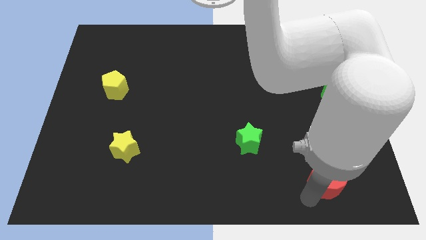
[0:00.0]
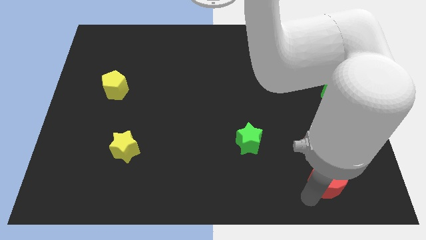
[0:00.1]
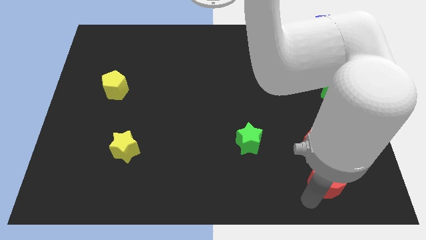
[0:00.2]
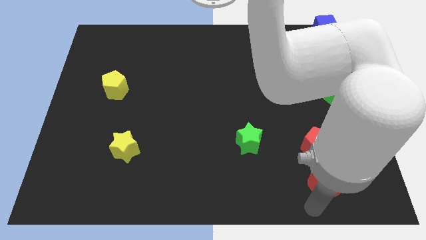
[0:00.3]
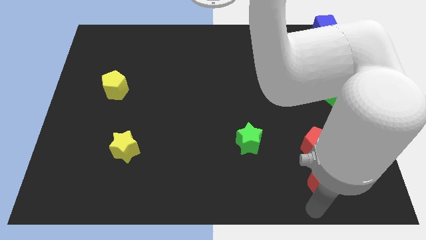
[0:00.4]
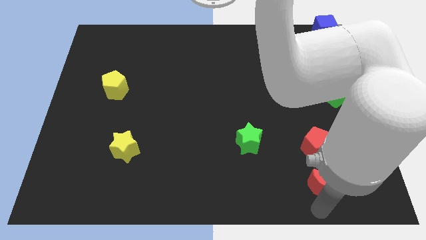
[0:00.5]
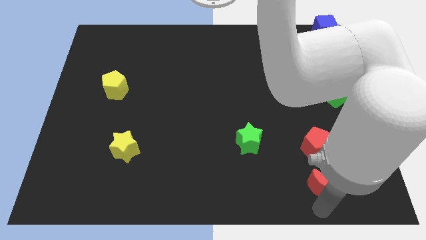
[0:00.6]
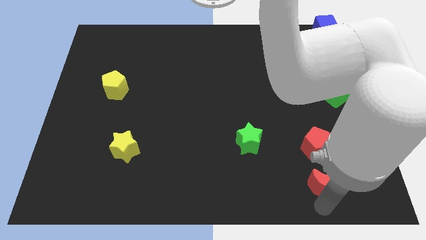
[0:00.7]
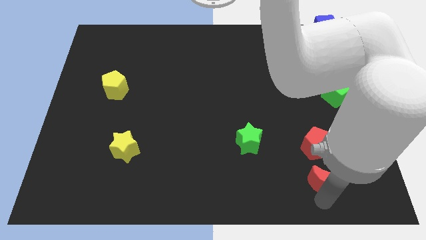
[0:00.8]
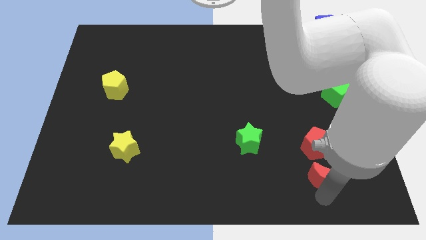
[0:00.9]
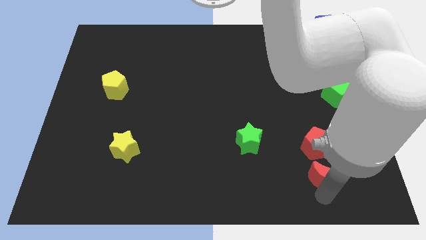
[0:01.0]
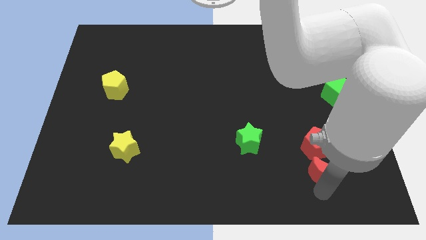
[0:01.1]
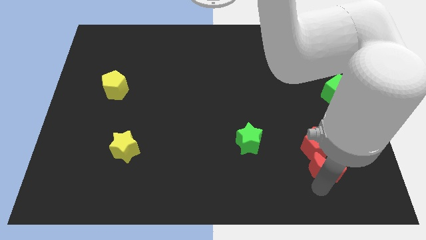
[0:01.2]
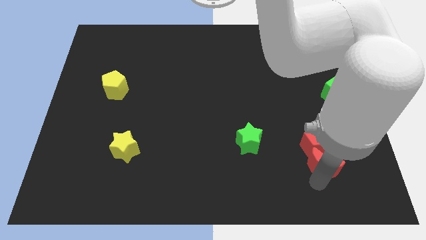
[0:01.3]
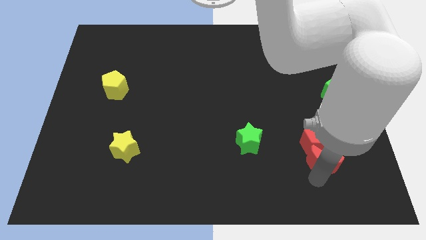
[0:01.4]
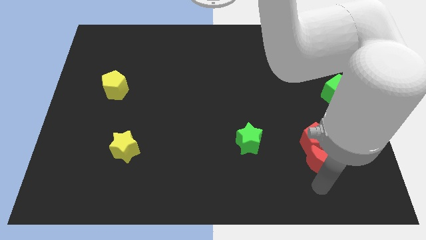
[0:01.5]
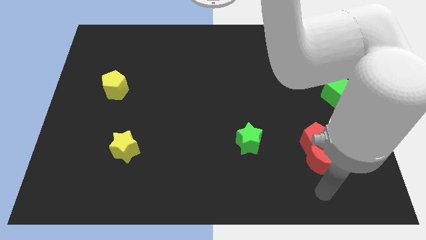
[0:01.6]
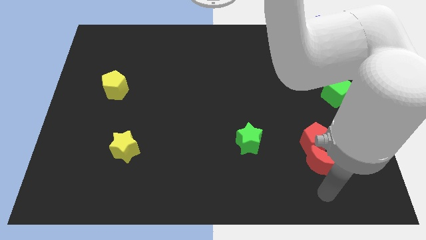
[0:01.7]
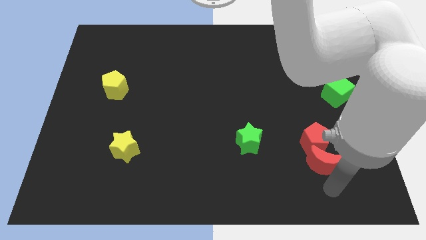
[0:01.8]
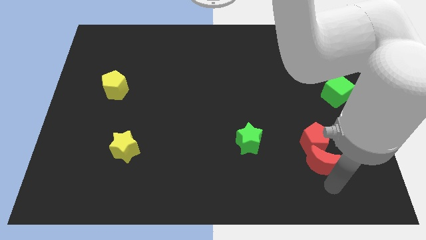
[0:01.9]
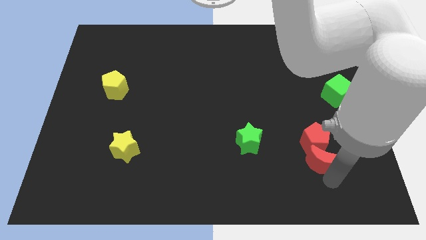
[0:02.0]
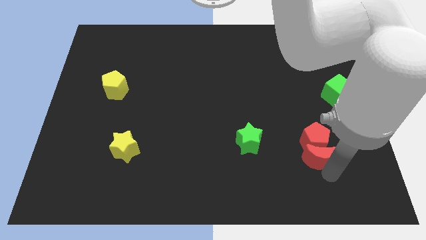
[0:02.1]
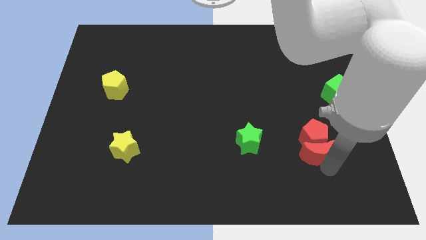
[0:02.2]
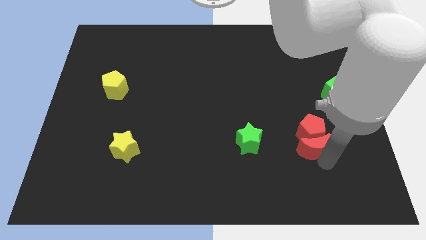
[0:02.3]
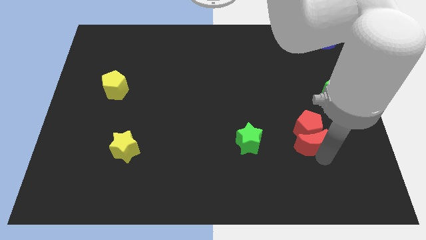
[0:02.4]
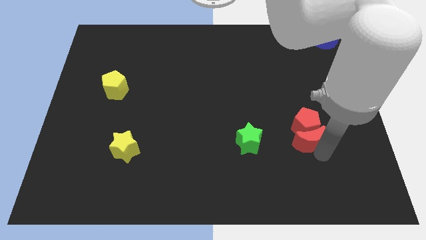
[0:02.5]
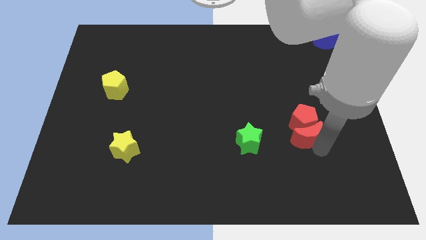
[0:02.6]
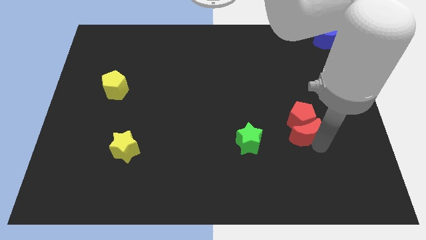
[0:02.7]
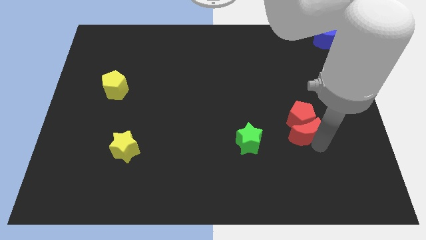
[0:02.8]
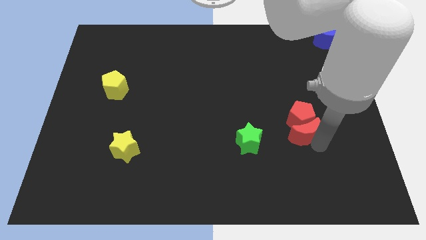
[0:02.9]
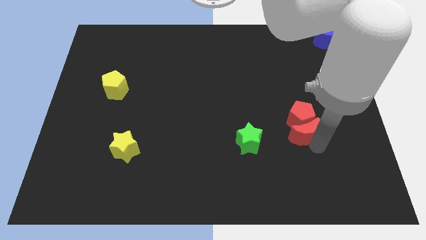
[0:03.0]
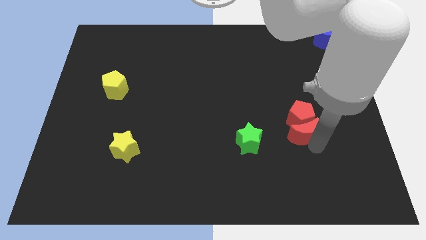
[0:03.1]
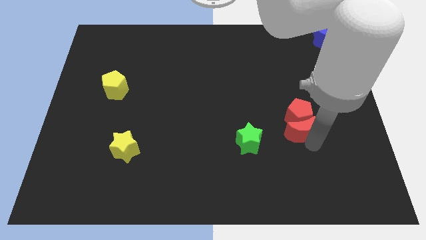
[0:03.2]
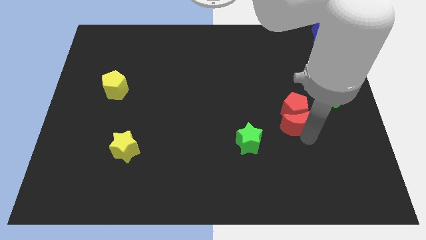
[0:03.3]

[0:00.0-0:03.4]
move red blocks diagonal between green blocks

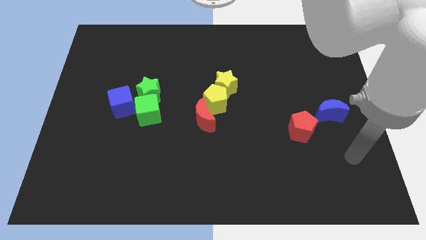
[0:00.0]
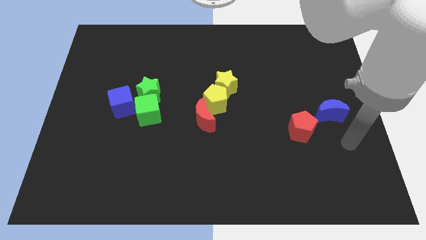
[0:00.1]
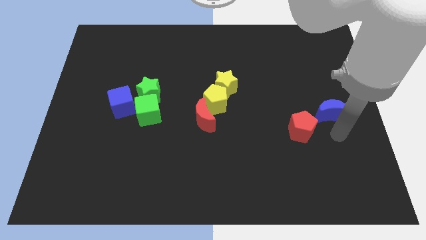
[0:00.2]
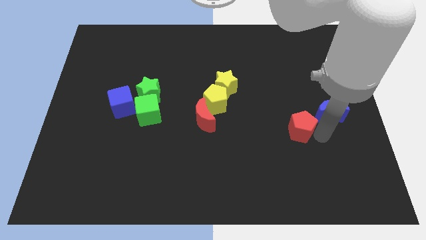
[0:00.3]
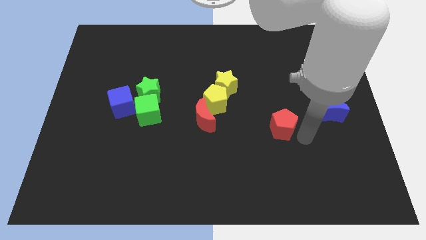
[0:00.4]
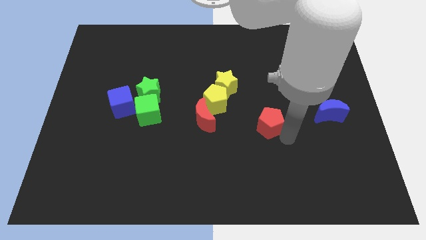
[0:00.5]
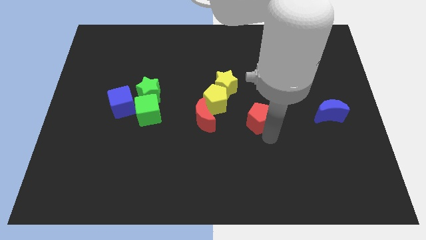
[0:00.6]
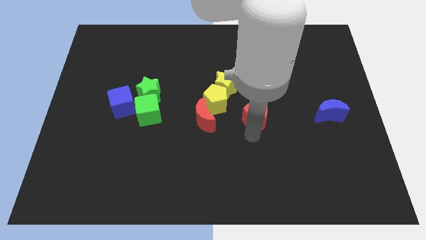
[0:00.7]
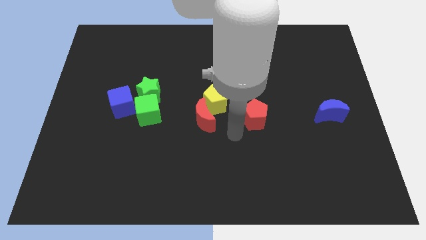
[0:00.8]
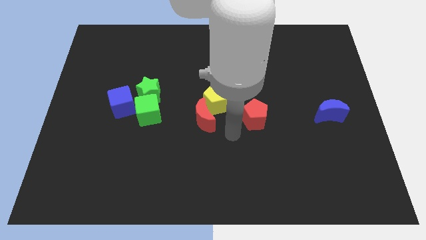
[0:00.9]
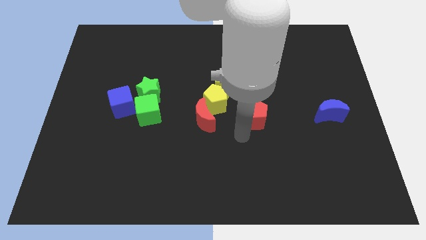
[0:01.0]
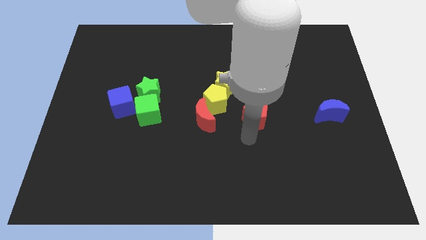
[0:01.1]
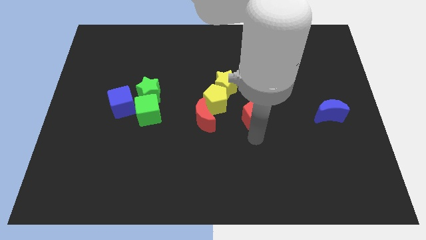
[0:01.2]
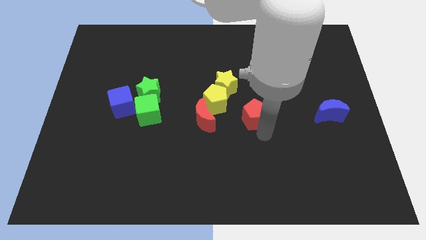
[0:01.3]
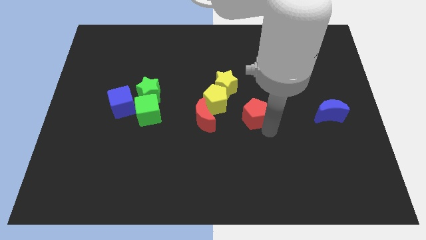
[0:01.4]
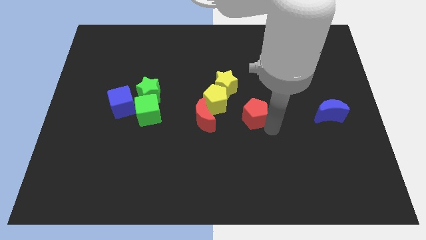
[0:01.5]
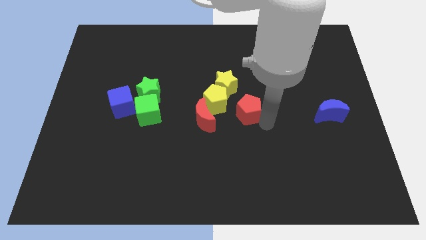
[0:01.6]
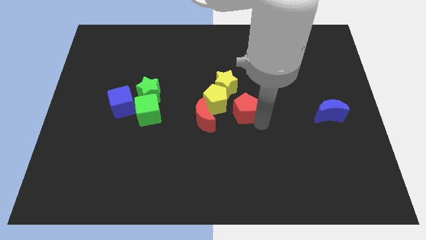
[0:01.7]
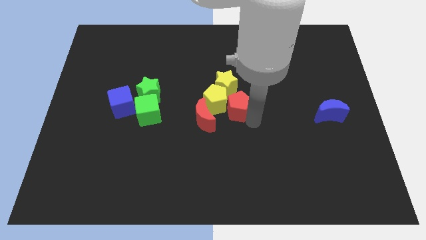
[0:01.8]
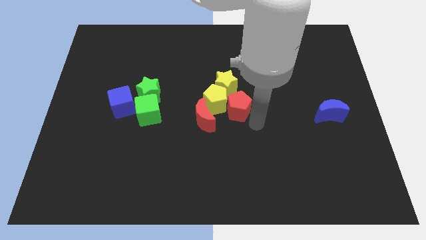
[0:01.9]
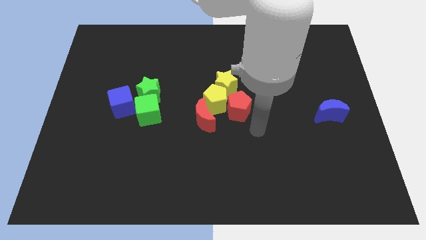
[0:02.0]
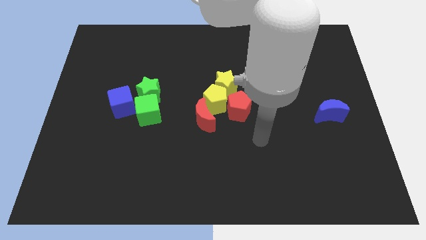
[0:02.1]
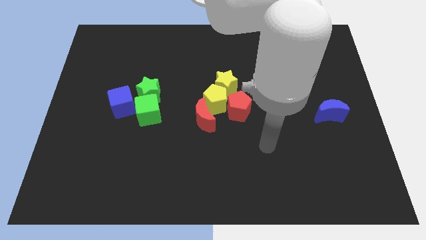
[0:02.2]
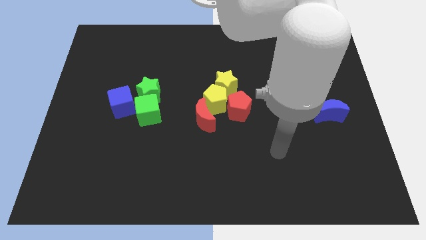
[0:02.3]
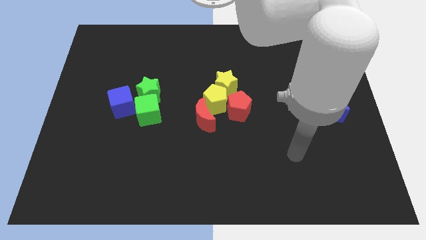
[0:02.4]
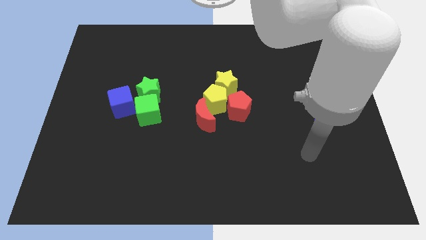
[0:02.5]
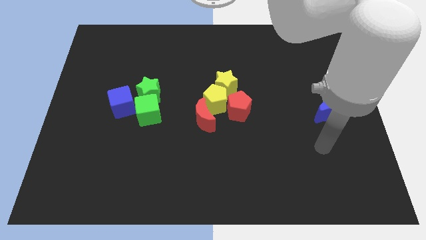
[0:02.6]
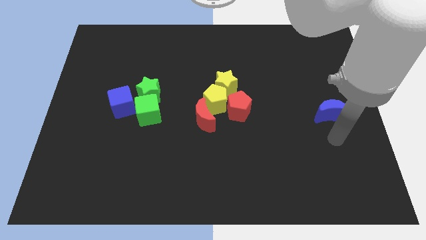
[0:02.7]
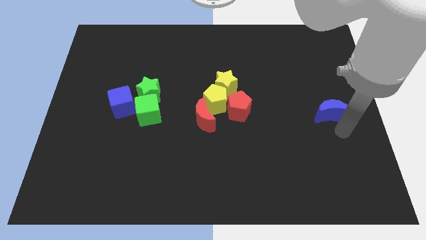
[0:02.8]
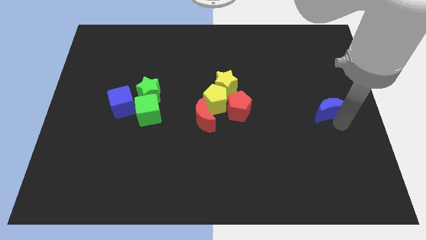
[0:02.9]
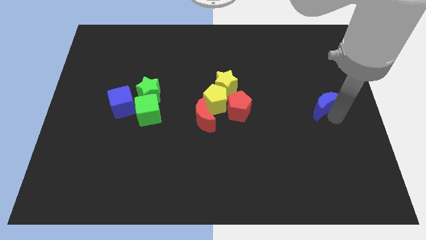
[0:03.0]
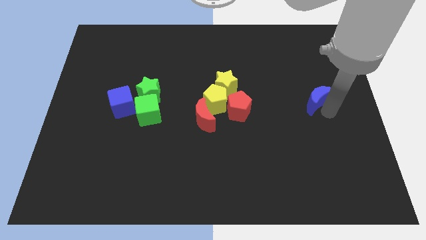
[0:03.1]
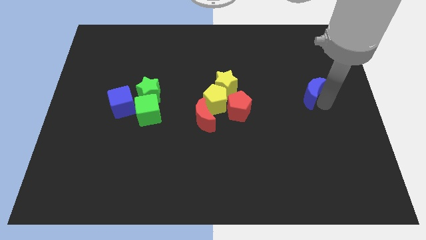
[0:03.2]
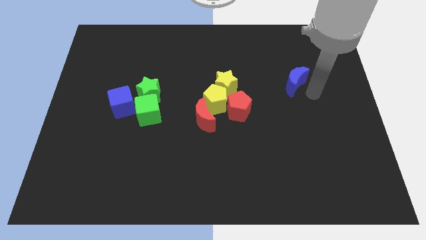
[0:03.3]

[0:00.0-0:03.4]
move the red pentagon away from the blue moon

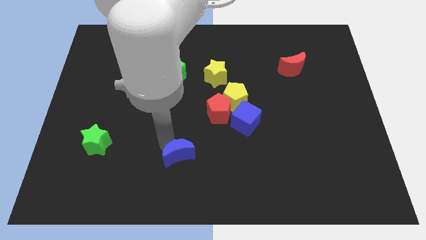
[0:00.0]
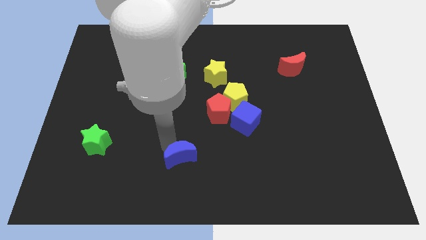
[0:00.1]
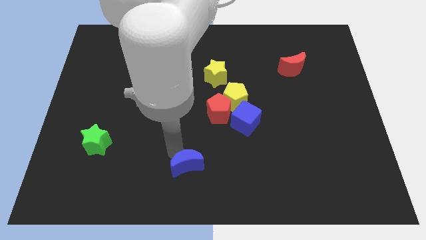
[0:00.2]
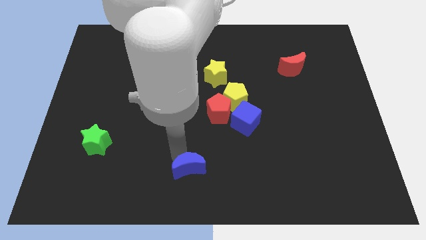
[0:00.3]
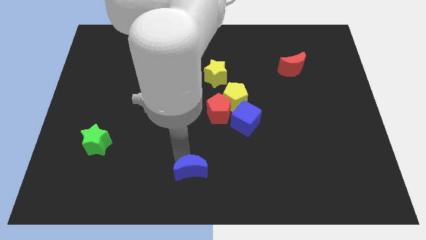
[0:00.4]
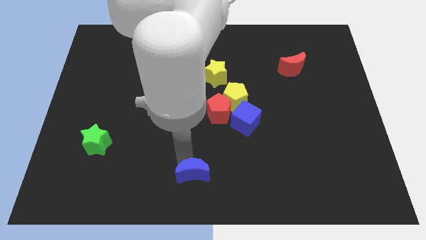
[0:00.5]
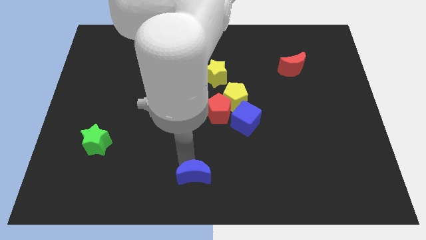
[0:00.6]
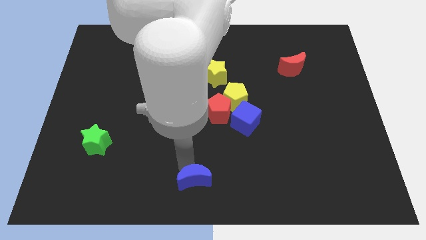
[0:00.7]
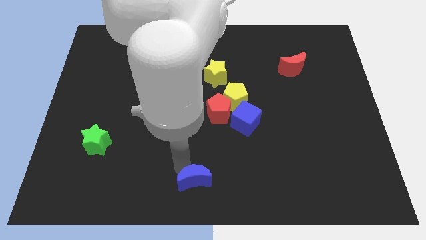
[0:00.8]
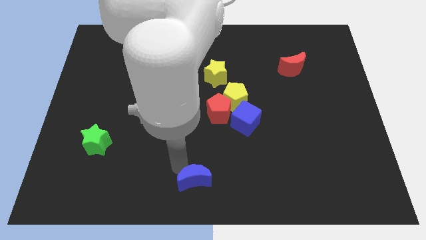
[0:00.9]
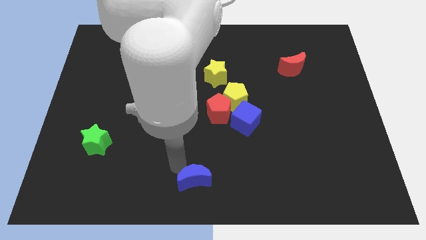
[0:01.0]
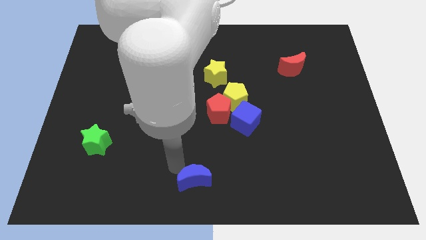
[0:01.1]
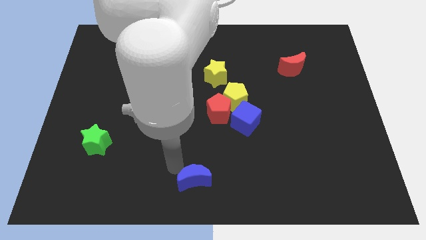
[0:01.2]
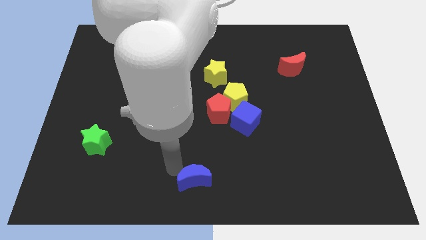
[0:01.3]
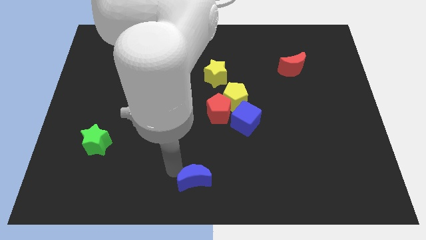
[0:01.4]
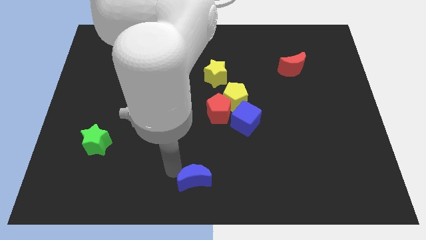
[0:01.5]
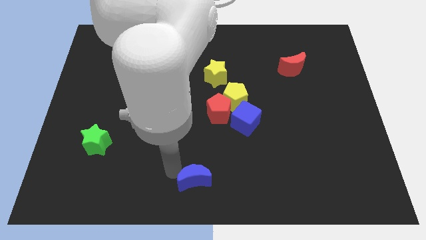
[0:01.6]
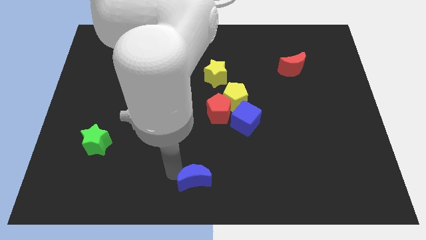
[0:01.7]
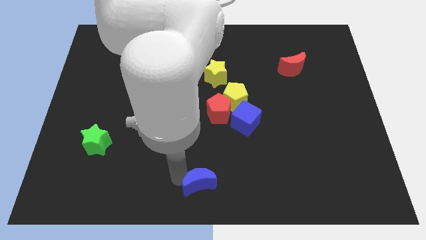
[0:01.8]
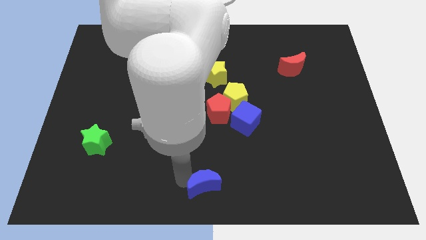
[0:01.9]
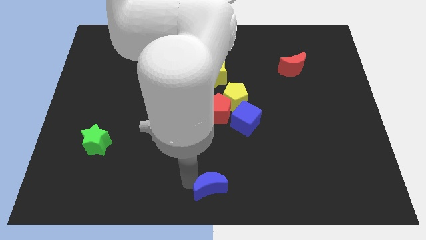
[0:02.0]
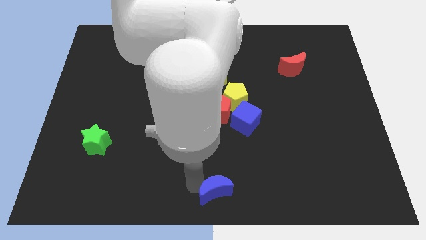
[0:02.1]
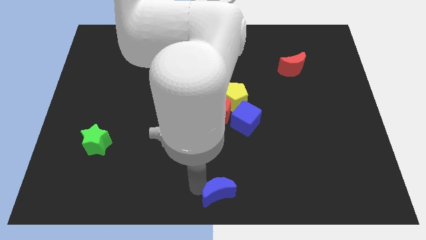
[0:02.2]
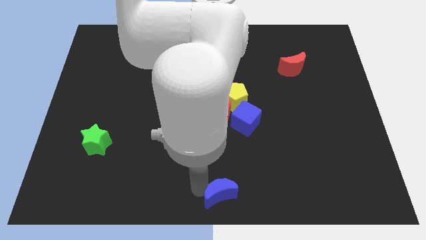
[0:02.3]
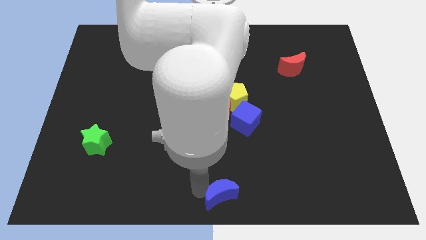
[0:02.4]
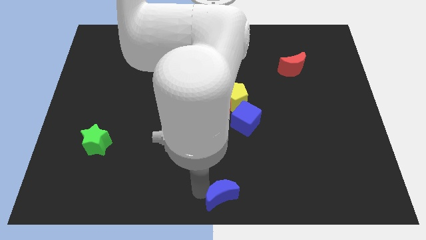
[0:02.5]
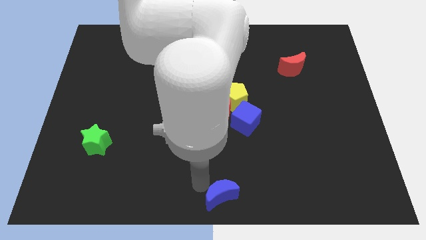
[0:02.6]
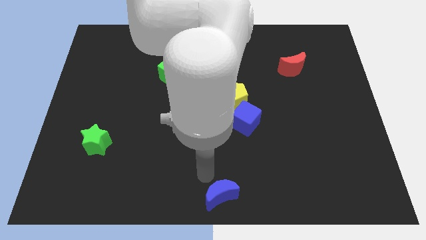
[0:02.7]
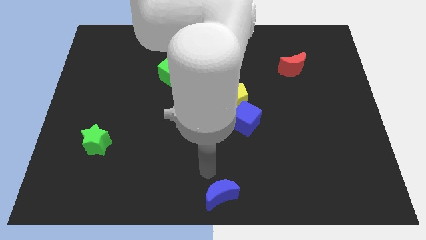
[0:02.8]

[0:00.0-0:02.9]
place blue crescent towards bottom middle end
